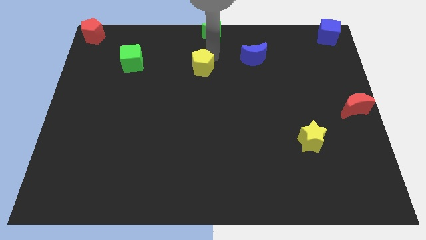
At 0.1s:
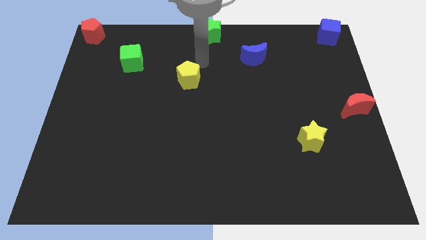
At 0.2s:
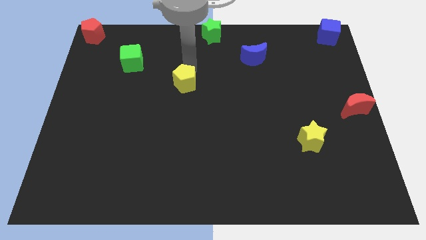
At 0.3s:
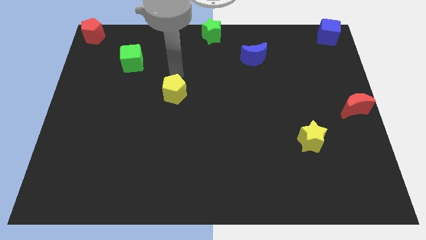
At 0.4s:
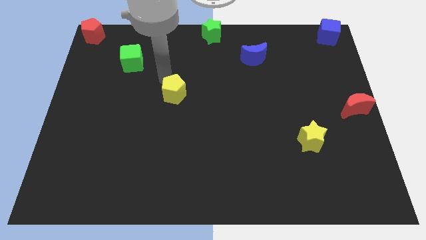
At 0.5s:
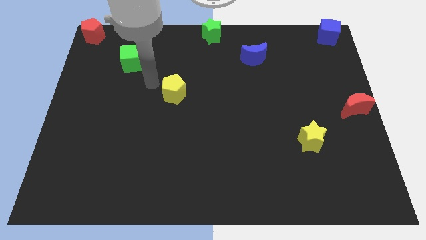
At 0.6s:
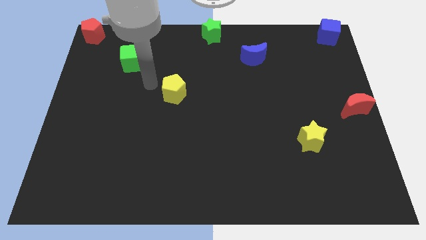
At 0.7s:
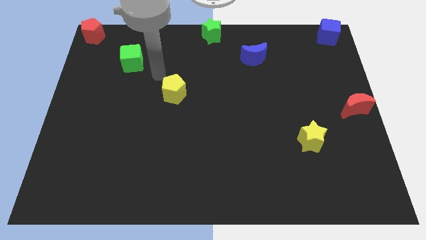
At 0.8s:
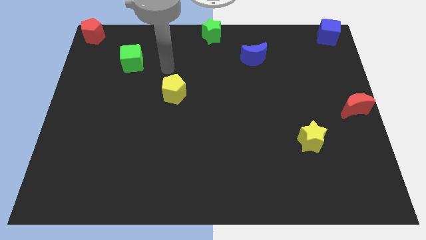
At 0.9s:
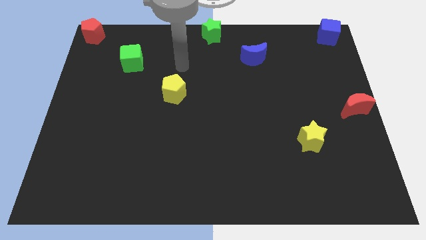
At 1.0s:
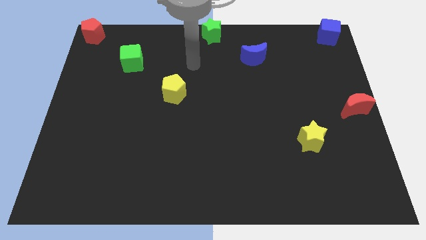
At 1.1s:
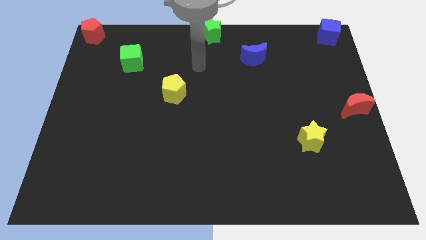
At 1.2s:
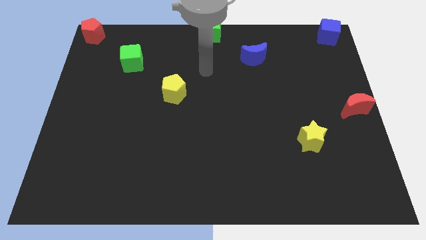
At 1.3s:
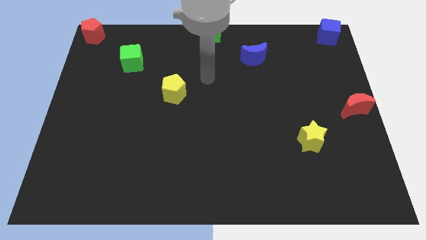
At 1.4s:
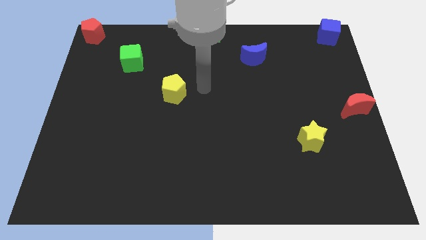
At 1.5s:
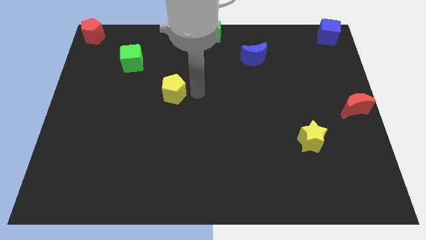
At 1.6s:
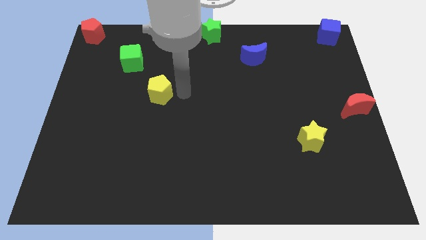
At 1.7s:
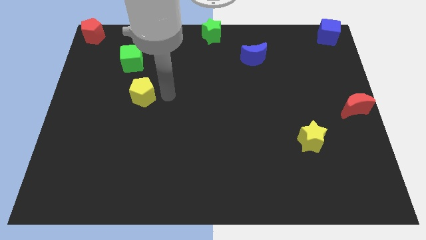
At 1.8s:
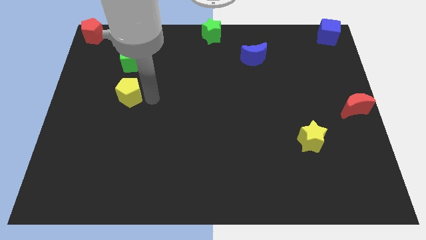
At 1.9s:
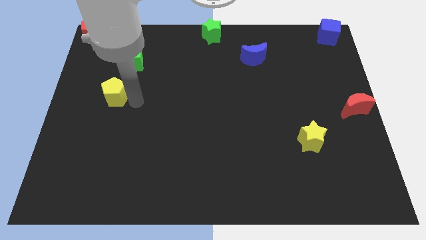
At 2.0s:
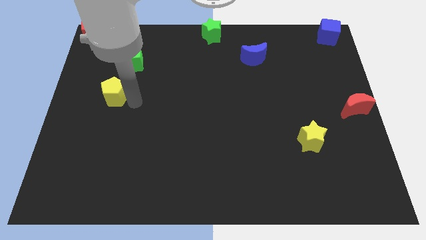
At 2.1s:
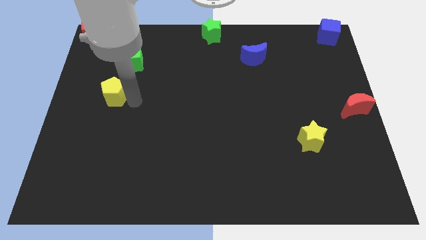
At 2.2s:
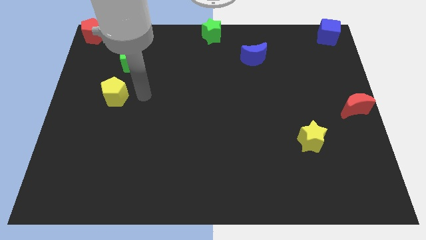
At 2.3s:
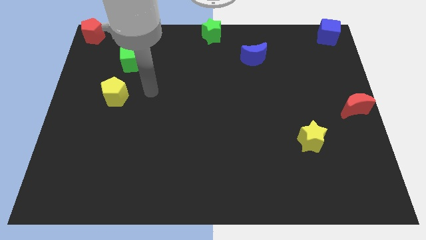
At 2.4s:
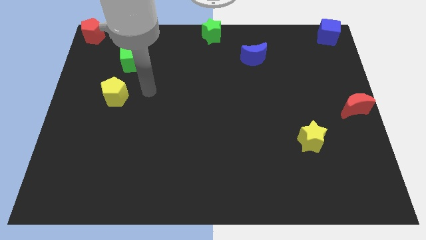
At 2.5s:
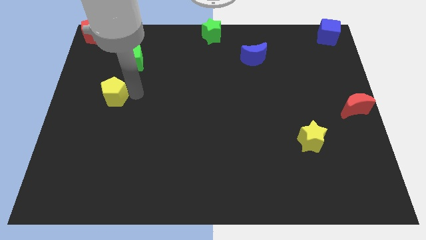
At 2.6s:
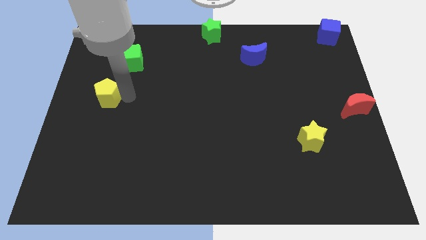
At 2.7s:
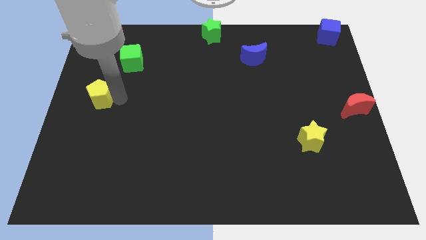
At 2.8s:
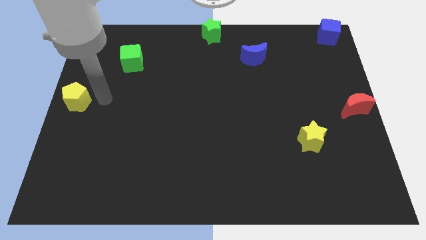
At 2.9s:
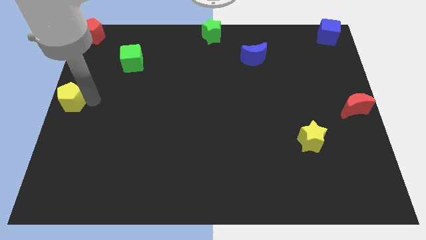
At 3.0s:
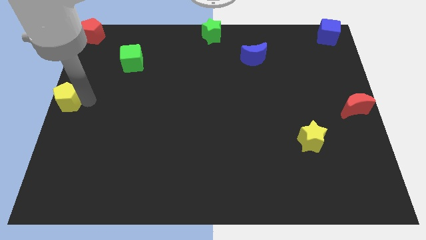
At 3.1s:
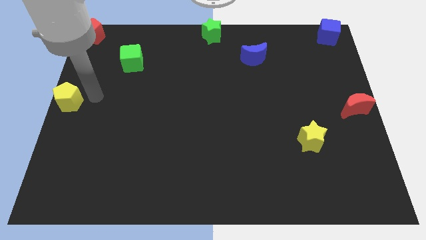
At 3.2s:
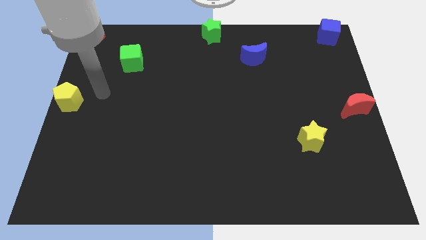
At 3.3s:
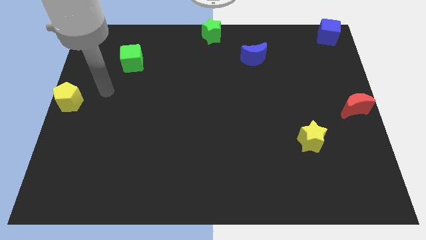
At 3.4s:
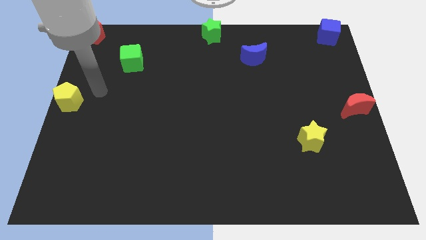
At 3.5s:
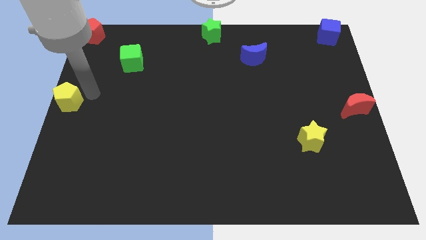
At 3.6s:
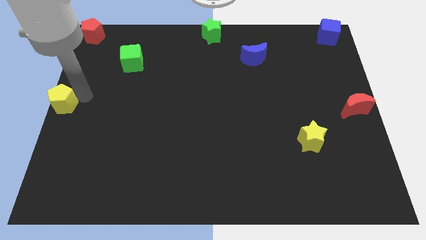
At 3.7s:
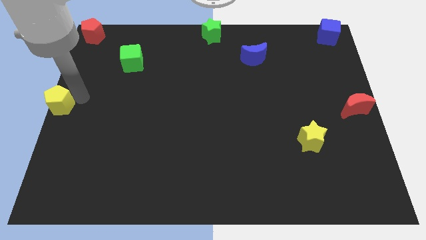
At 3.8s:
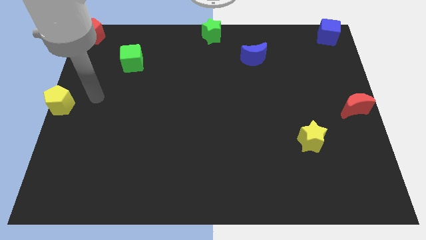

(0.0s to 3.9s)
place the yellow pentagon to the left center of the board

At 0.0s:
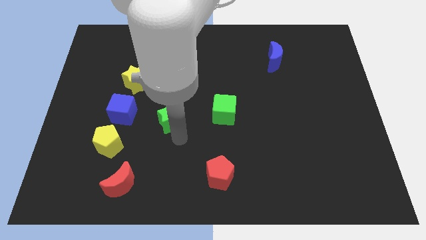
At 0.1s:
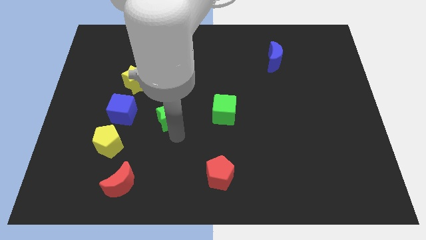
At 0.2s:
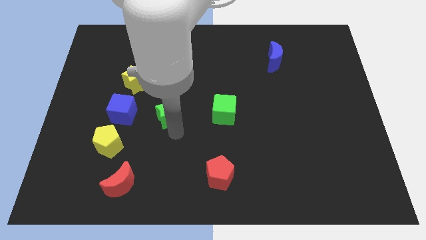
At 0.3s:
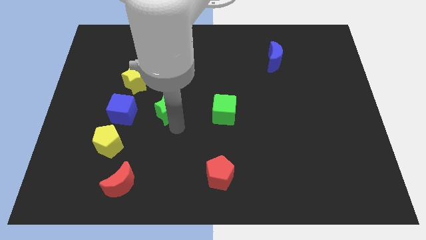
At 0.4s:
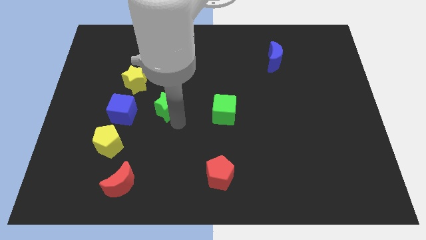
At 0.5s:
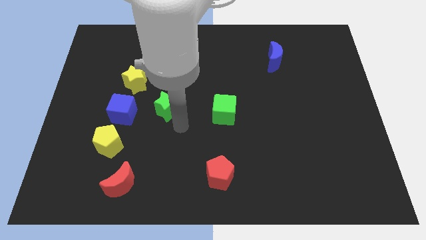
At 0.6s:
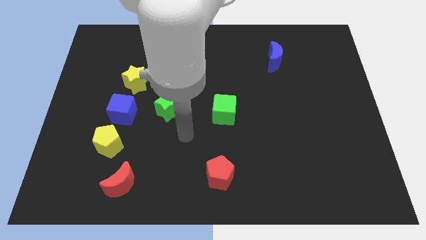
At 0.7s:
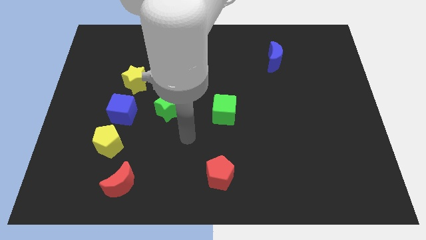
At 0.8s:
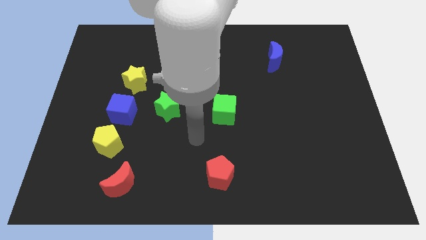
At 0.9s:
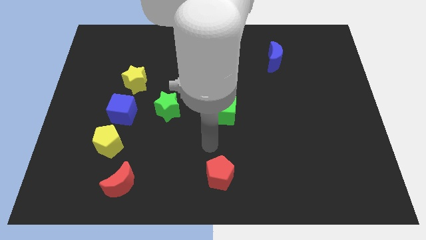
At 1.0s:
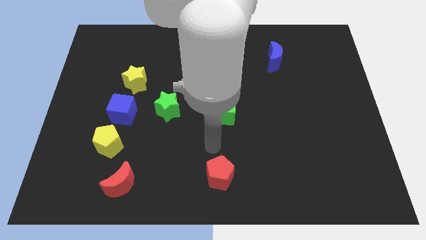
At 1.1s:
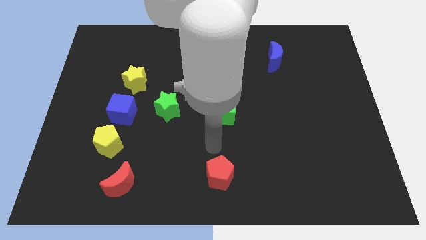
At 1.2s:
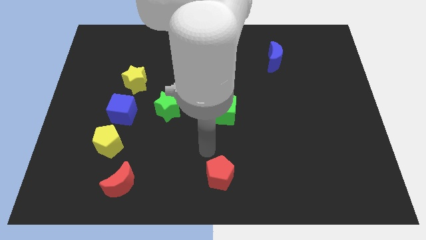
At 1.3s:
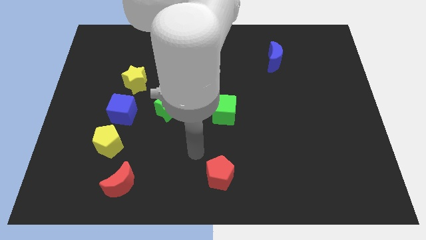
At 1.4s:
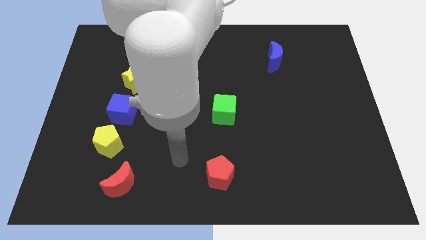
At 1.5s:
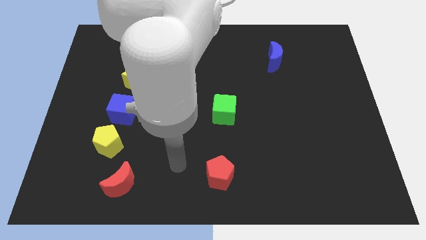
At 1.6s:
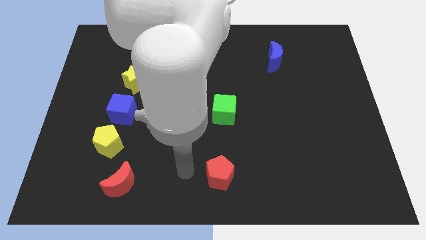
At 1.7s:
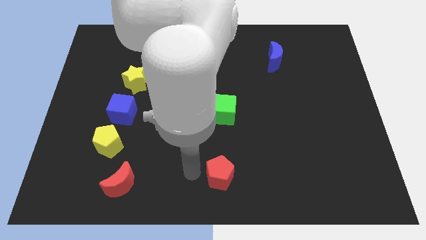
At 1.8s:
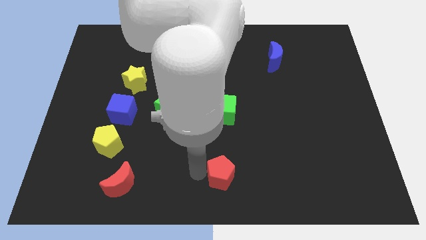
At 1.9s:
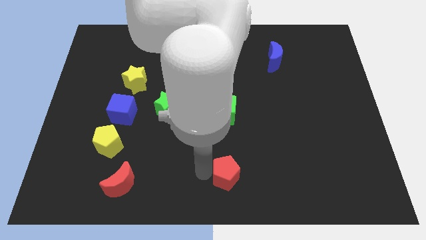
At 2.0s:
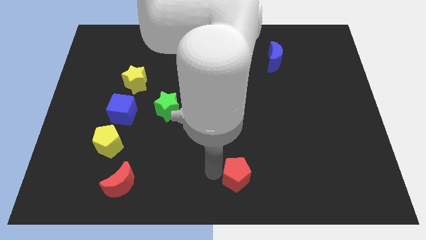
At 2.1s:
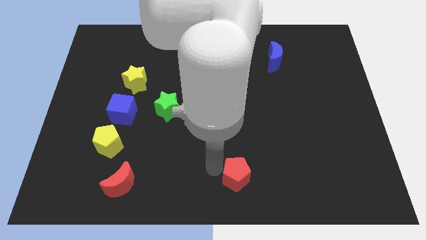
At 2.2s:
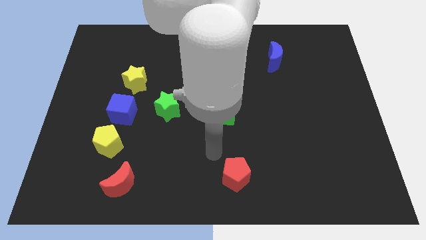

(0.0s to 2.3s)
push red pentagon slightly towards right

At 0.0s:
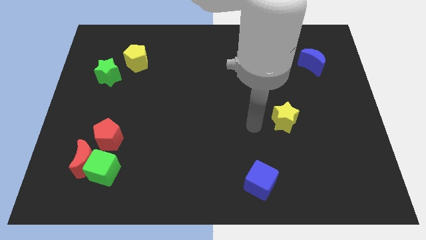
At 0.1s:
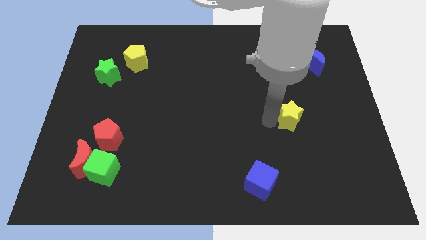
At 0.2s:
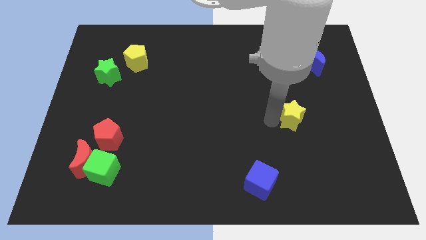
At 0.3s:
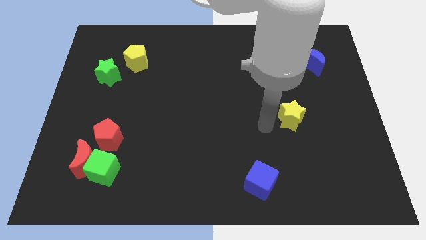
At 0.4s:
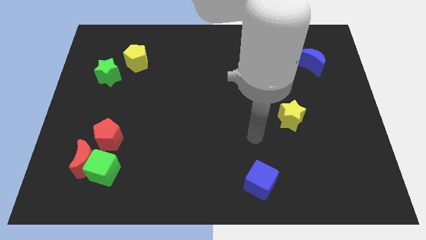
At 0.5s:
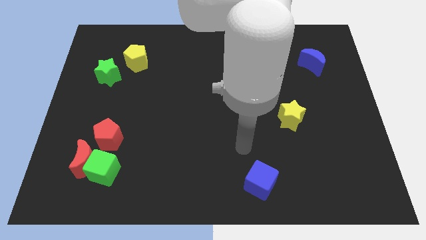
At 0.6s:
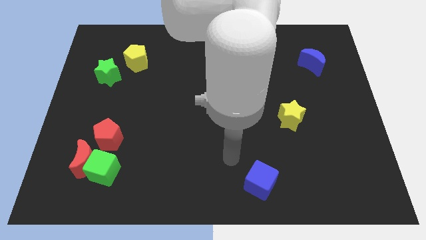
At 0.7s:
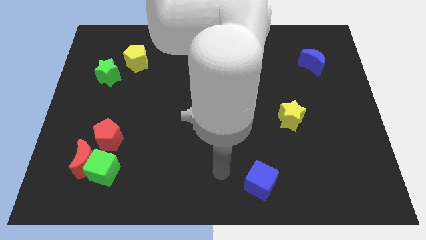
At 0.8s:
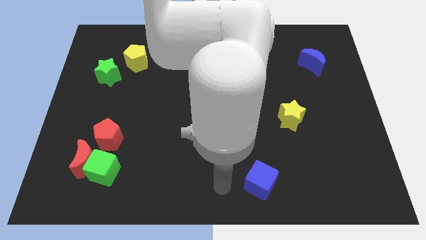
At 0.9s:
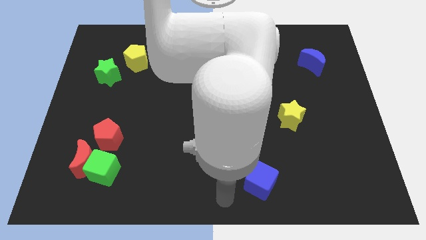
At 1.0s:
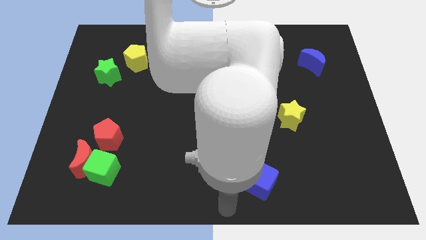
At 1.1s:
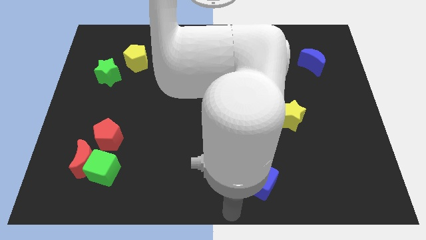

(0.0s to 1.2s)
place the yellow star between blue blocks

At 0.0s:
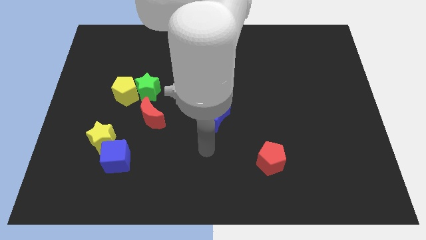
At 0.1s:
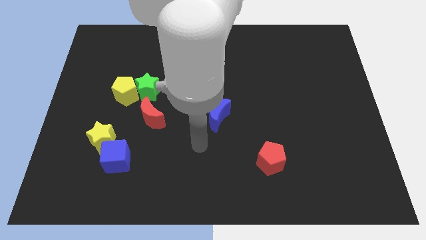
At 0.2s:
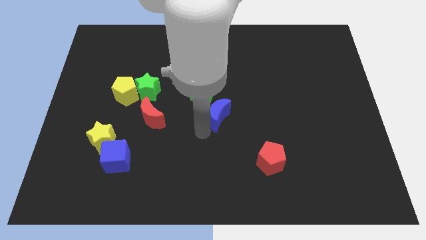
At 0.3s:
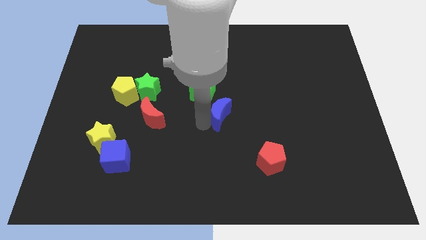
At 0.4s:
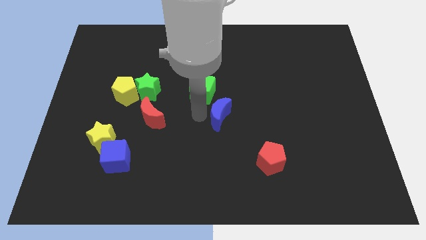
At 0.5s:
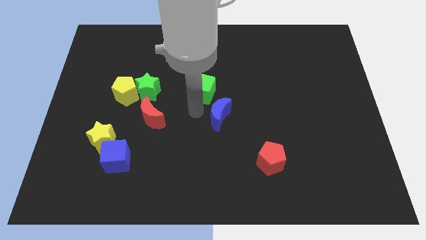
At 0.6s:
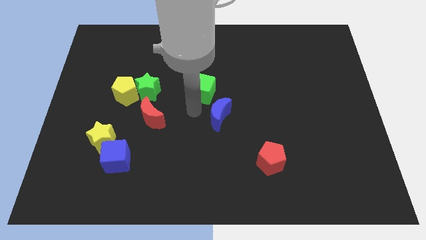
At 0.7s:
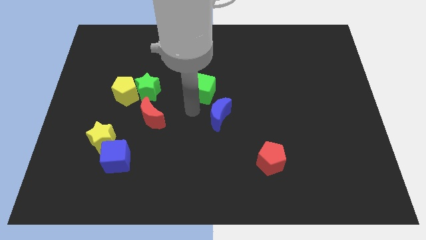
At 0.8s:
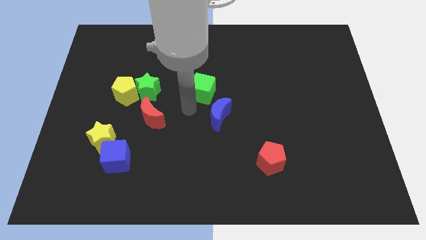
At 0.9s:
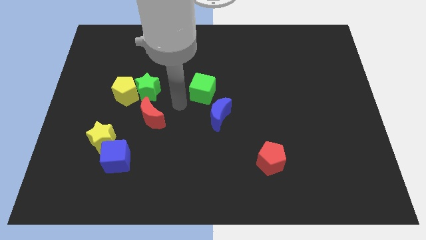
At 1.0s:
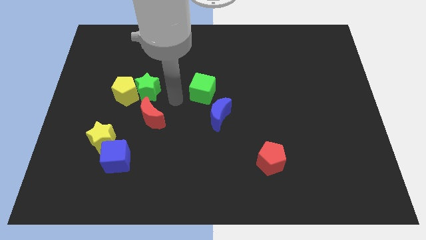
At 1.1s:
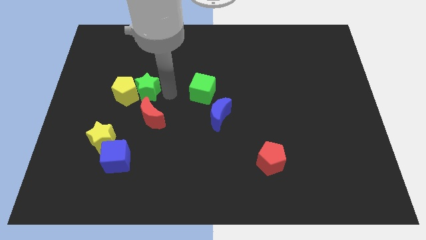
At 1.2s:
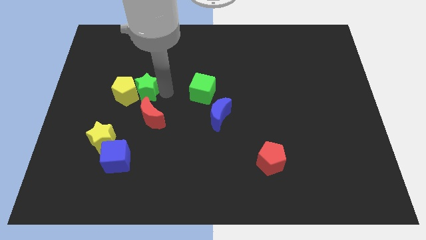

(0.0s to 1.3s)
go to the right side of the green star

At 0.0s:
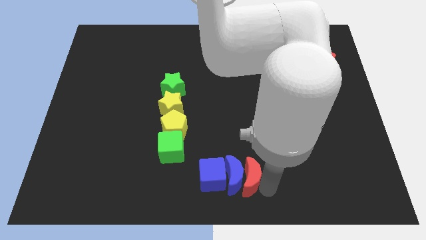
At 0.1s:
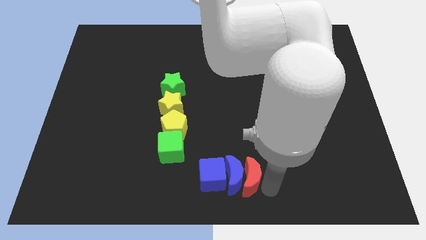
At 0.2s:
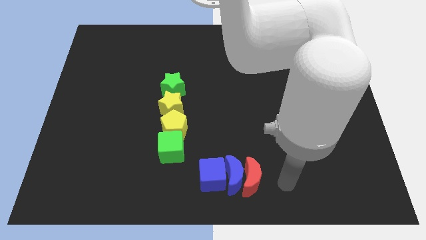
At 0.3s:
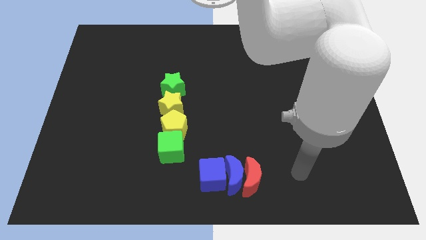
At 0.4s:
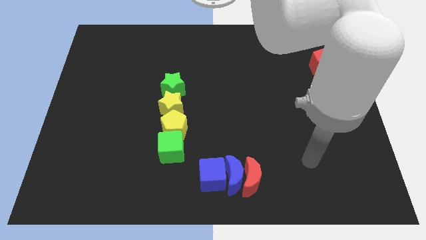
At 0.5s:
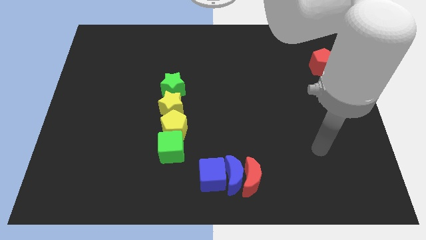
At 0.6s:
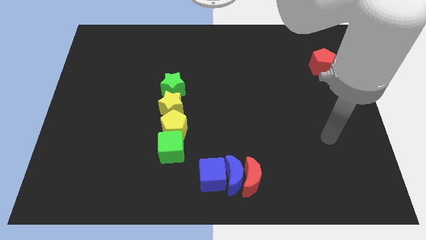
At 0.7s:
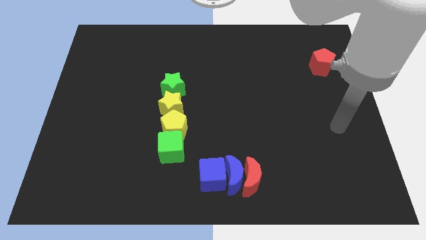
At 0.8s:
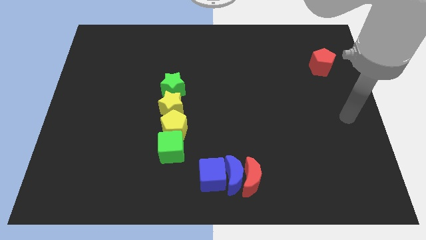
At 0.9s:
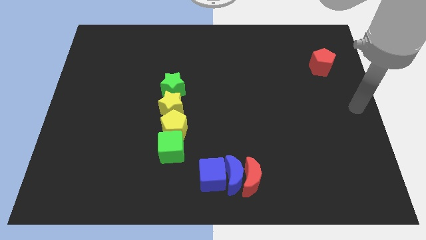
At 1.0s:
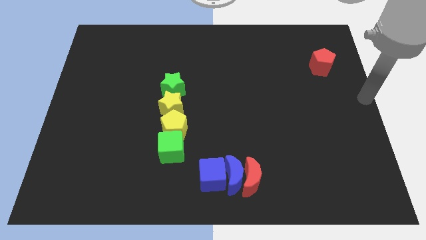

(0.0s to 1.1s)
take your arm away from the red crescent
